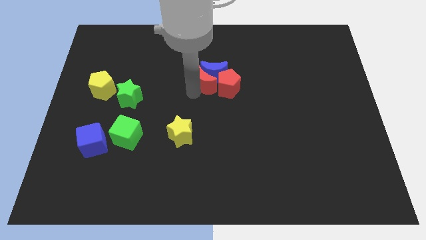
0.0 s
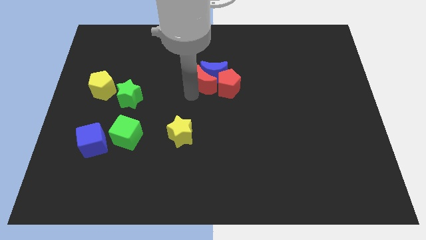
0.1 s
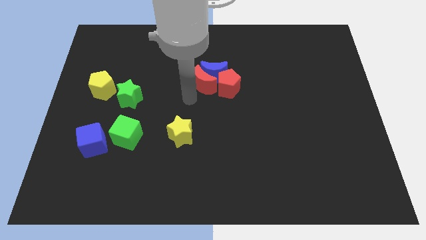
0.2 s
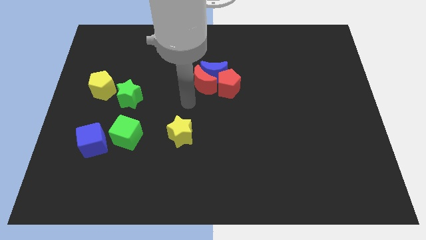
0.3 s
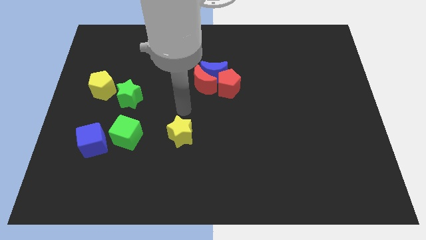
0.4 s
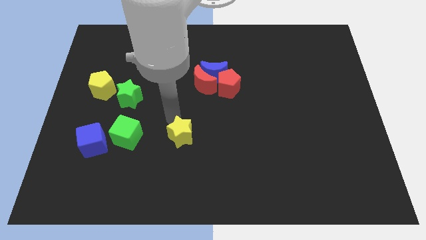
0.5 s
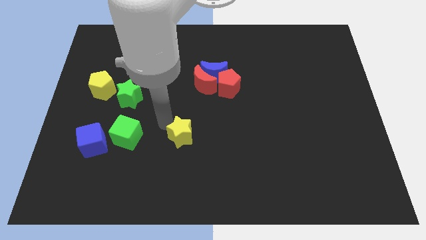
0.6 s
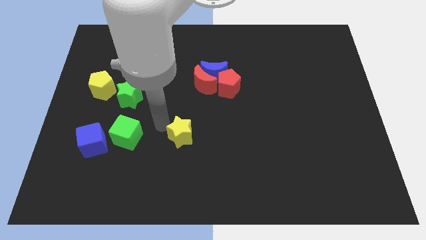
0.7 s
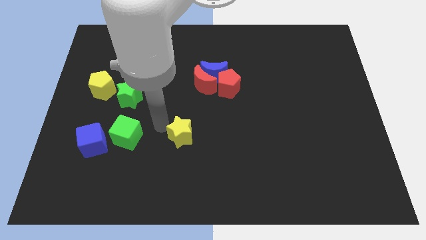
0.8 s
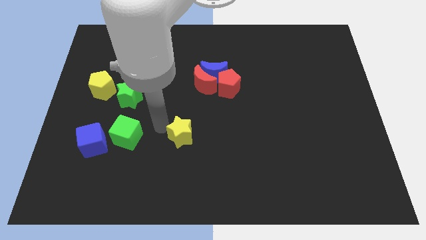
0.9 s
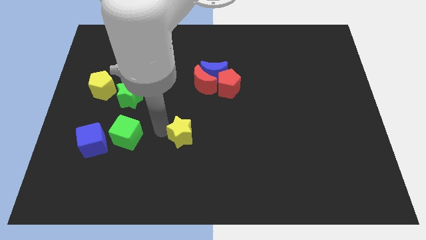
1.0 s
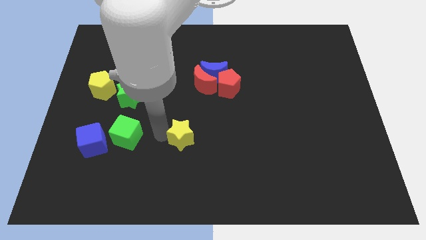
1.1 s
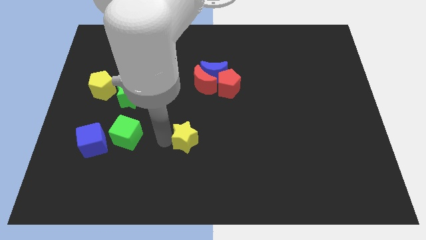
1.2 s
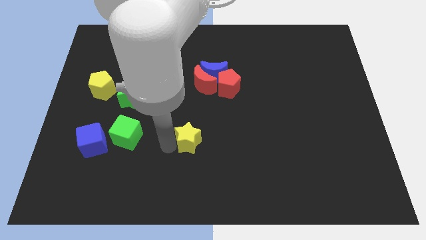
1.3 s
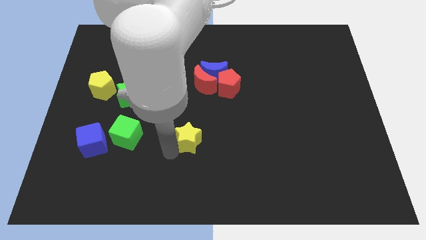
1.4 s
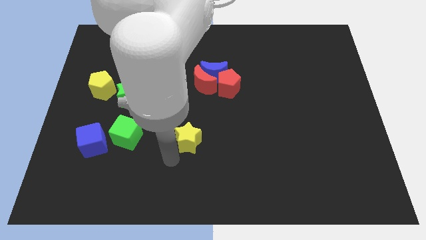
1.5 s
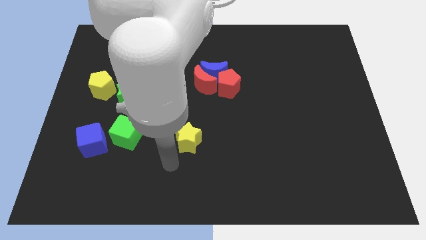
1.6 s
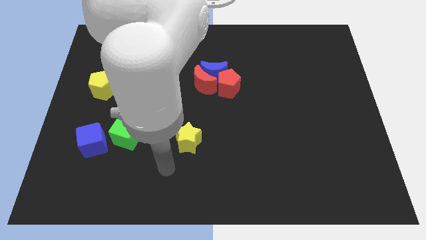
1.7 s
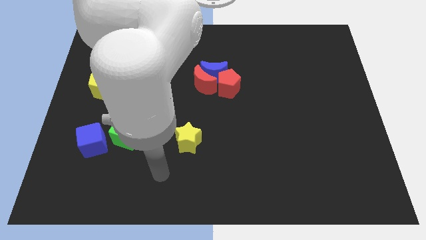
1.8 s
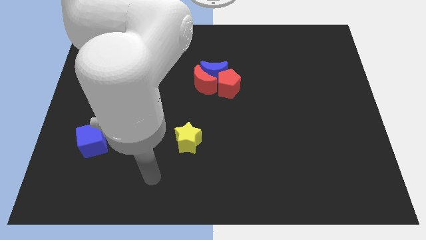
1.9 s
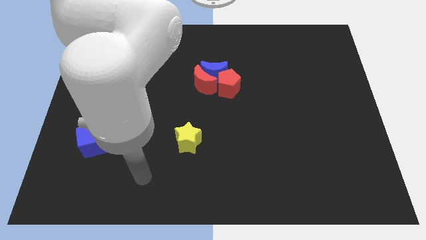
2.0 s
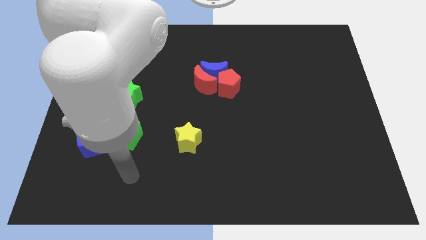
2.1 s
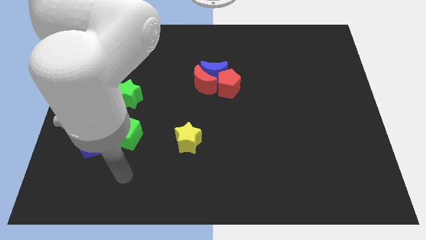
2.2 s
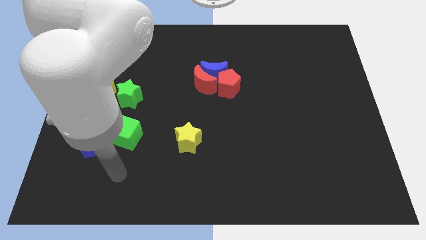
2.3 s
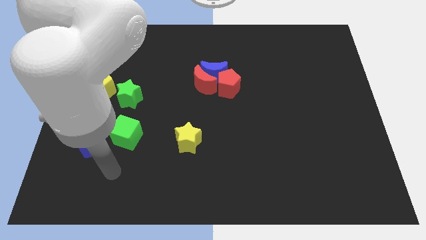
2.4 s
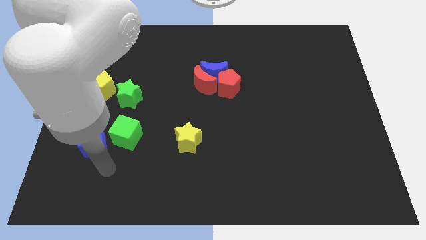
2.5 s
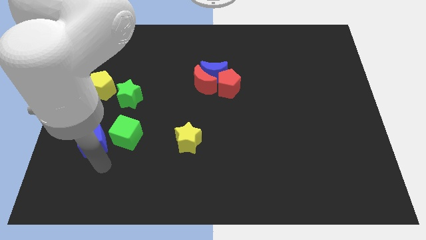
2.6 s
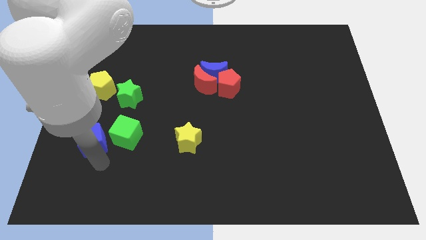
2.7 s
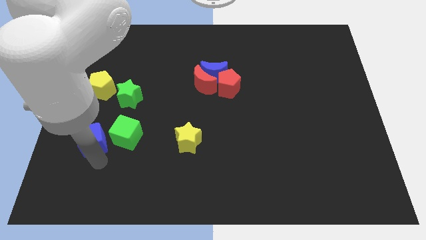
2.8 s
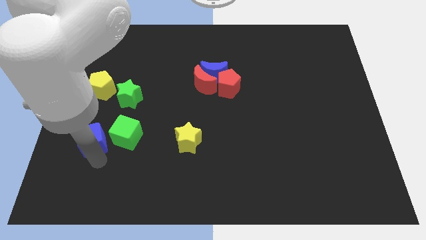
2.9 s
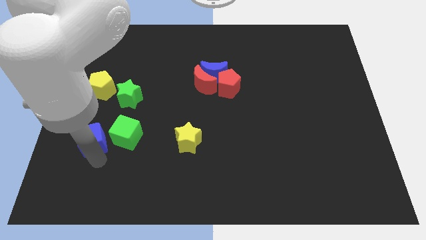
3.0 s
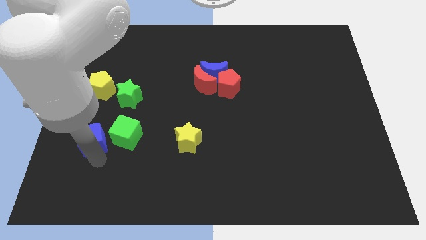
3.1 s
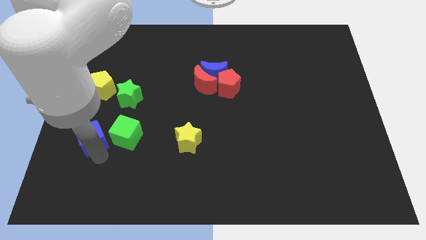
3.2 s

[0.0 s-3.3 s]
move the arm towrds the blue cube

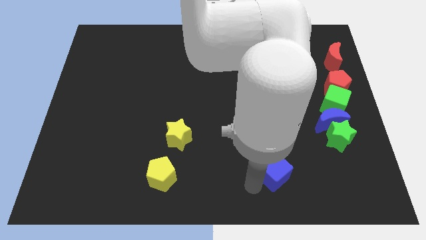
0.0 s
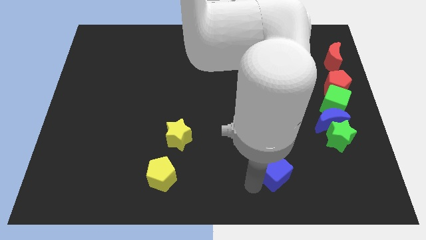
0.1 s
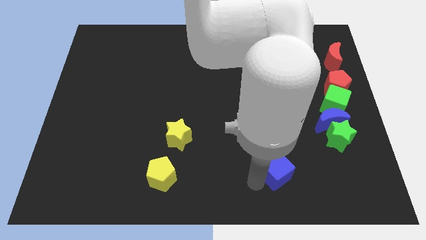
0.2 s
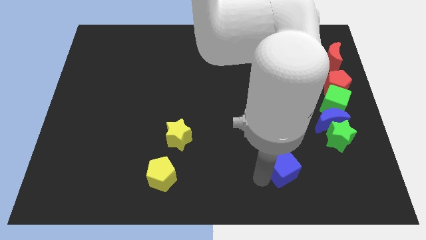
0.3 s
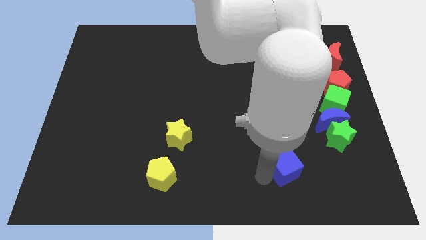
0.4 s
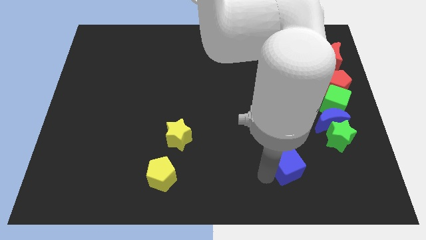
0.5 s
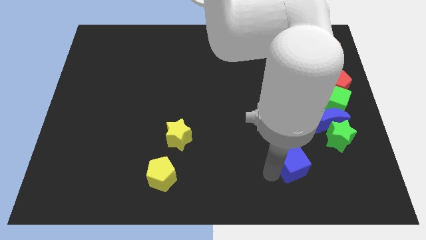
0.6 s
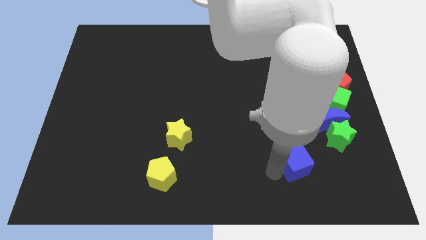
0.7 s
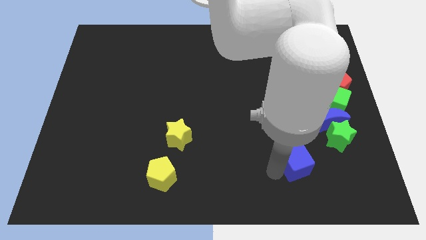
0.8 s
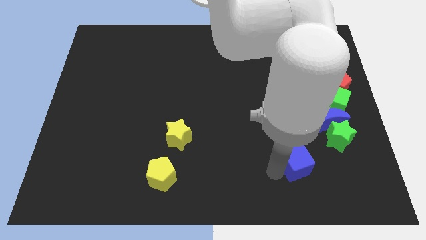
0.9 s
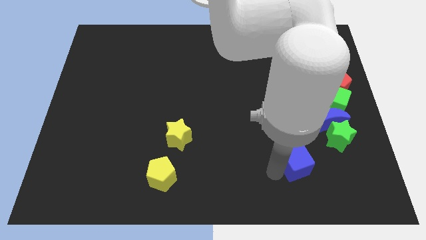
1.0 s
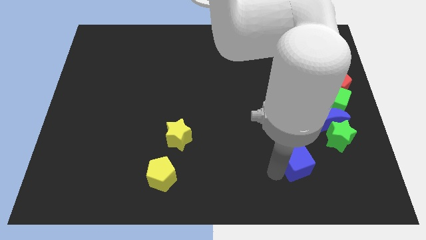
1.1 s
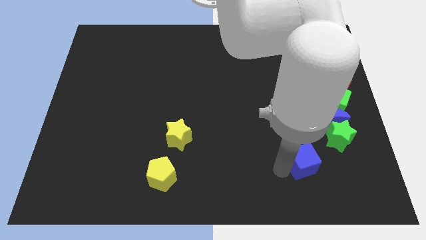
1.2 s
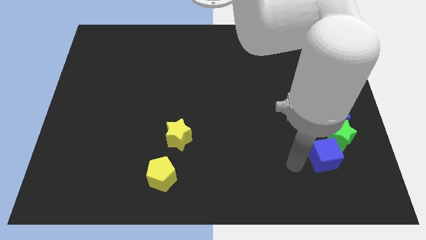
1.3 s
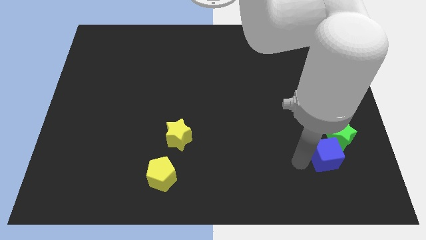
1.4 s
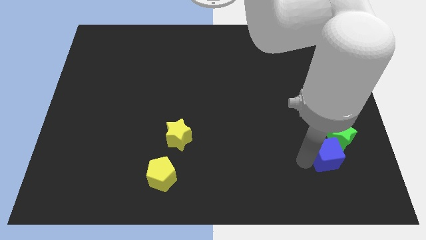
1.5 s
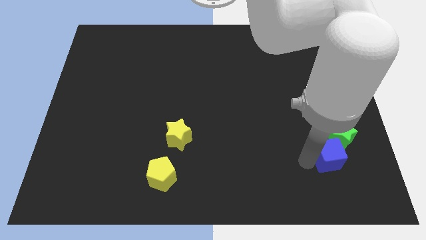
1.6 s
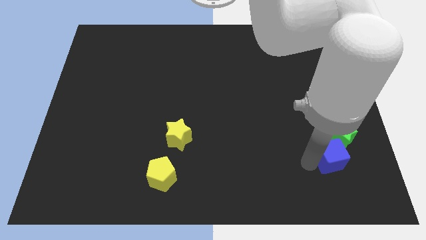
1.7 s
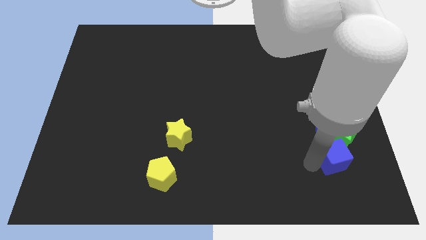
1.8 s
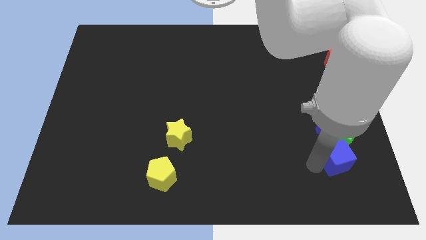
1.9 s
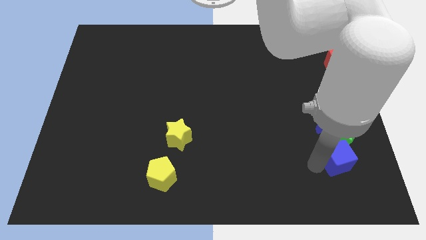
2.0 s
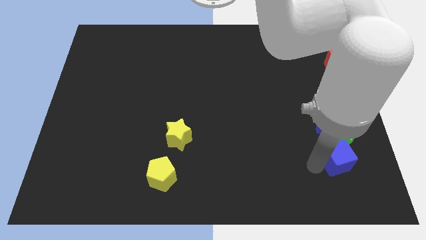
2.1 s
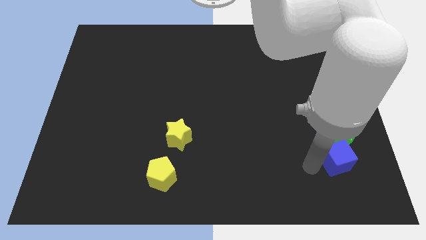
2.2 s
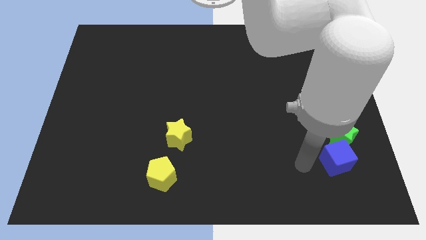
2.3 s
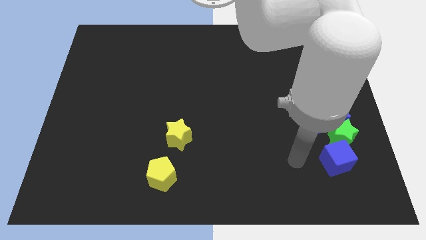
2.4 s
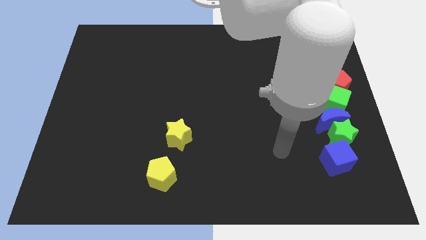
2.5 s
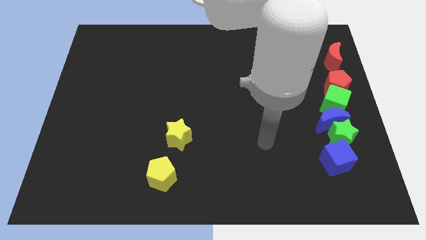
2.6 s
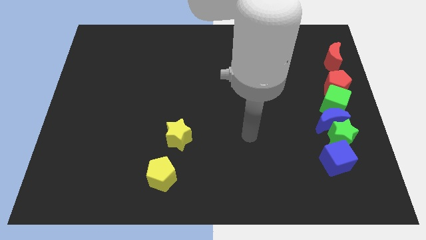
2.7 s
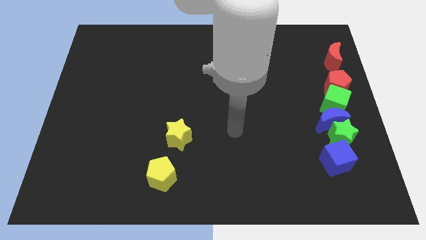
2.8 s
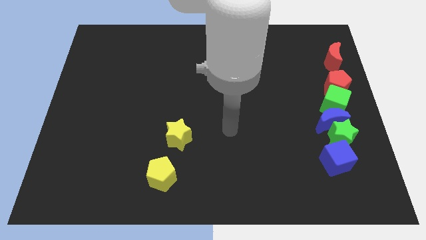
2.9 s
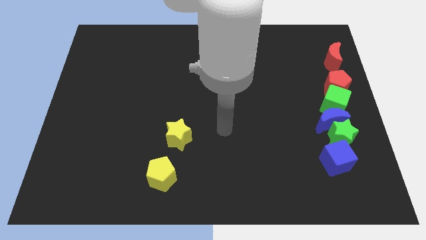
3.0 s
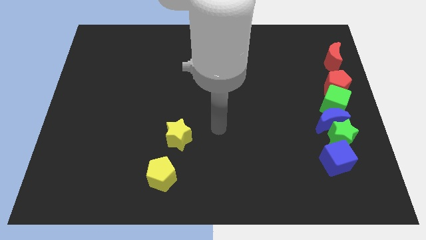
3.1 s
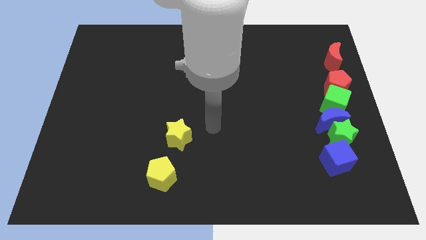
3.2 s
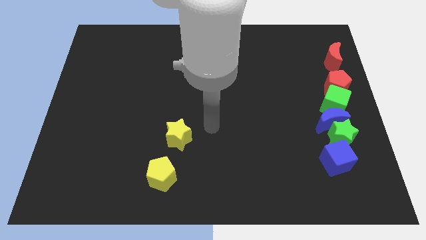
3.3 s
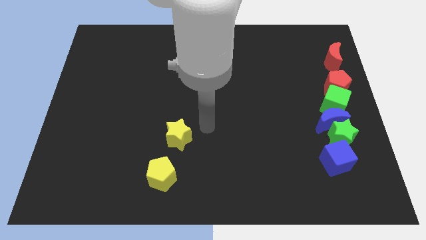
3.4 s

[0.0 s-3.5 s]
move the blue cube into the green star

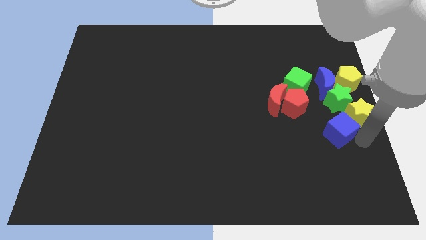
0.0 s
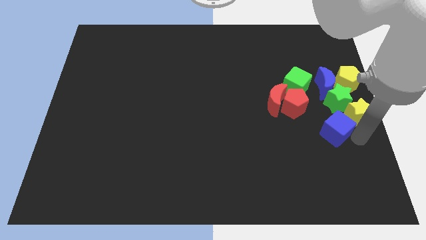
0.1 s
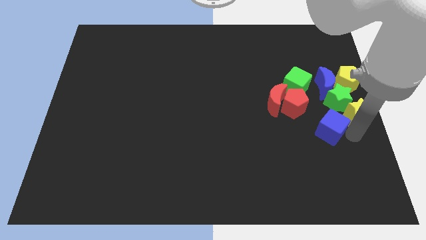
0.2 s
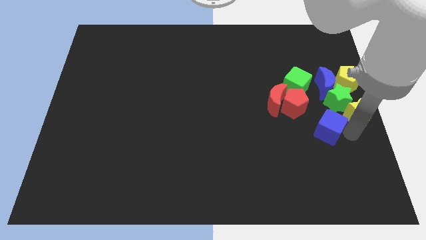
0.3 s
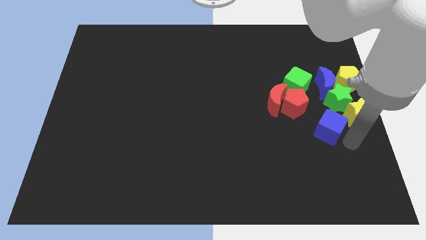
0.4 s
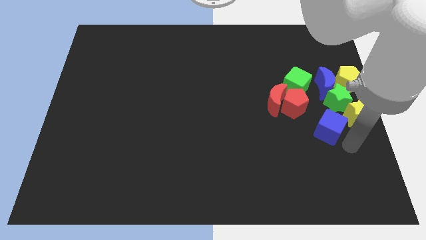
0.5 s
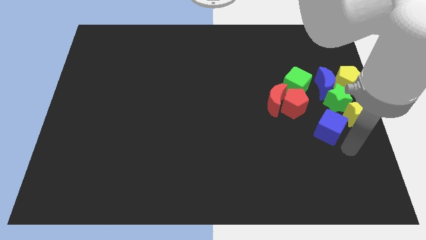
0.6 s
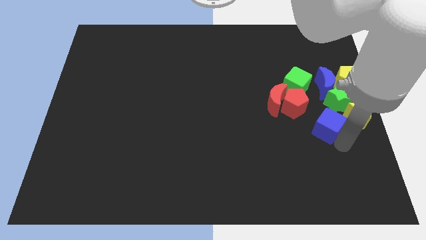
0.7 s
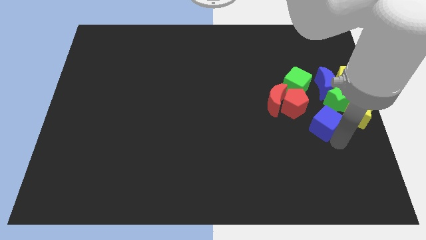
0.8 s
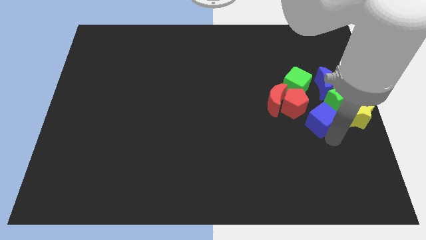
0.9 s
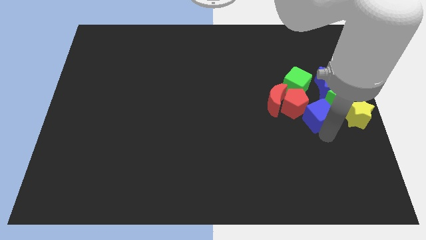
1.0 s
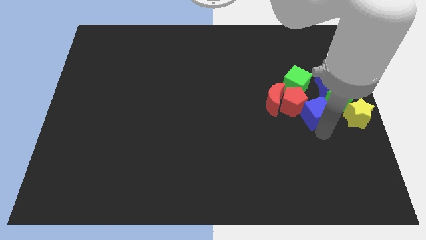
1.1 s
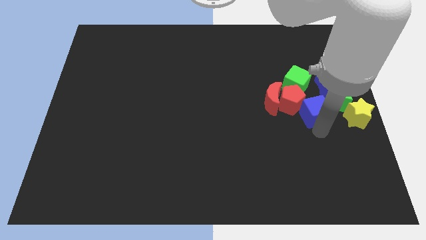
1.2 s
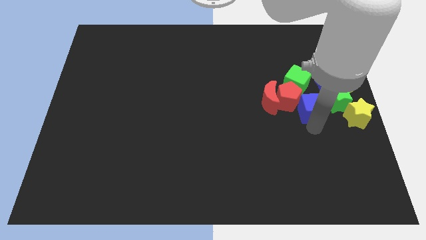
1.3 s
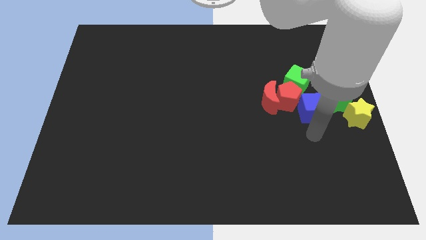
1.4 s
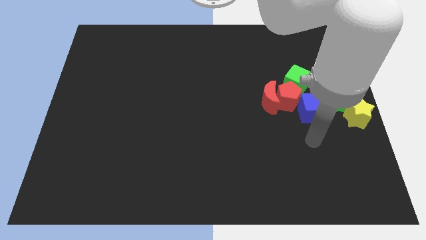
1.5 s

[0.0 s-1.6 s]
move the blue cube slightly up

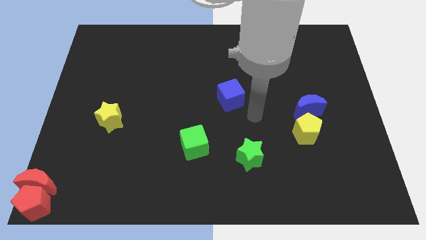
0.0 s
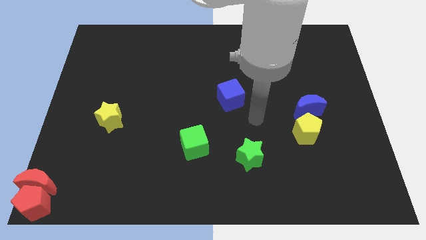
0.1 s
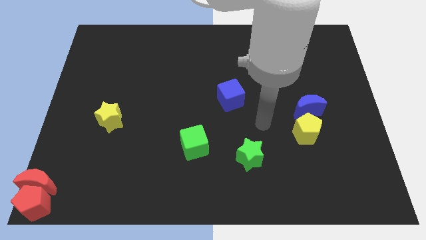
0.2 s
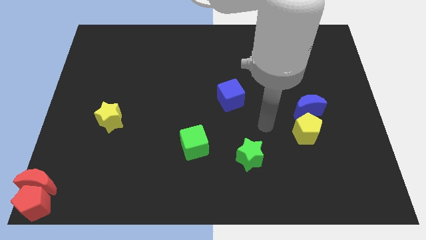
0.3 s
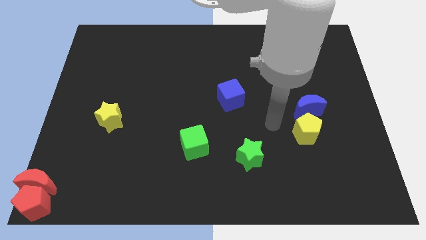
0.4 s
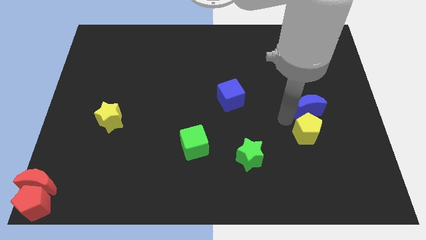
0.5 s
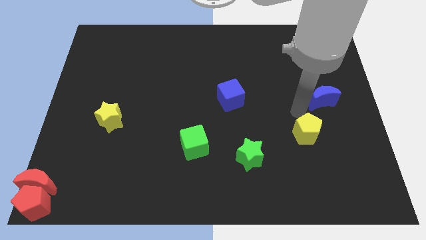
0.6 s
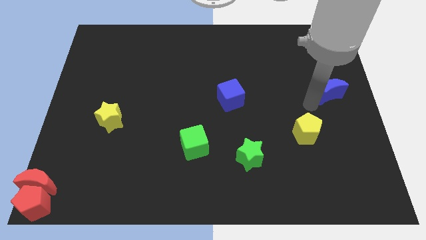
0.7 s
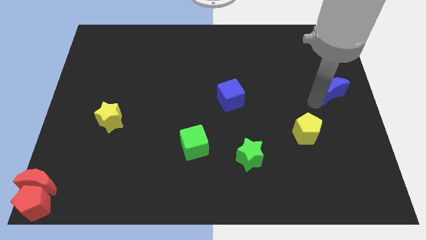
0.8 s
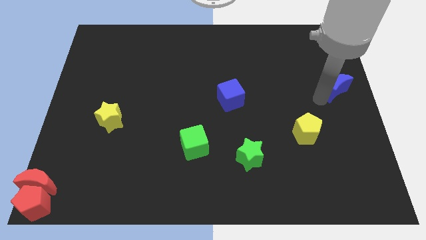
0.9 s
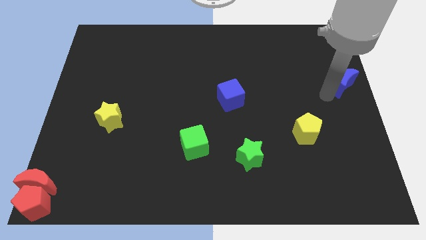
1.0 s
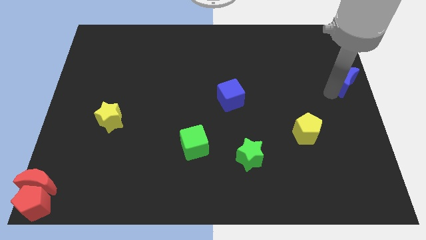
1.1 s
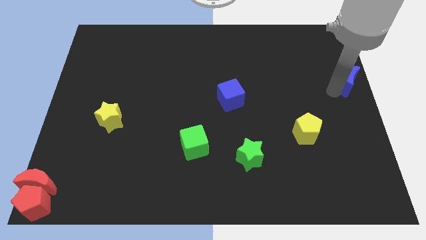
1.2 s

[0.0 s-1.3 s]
place the blue moon to the middle right
